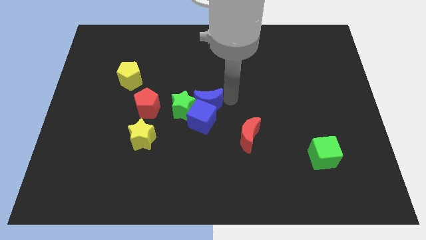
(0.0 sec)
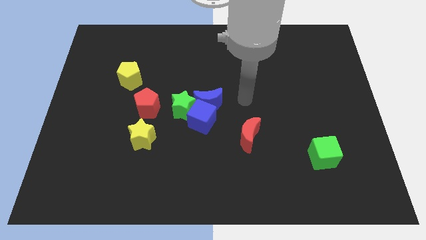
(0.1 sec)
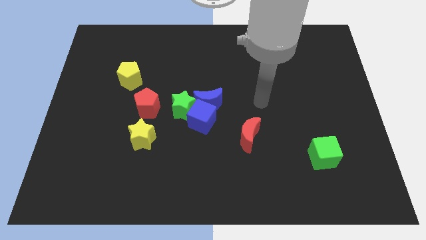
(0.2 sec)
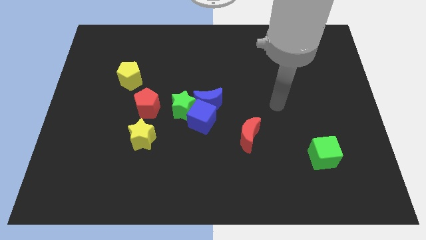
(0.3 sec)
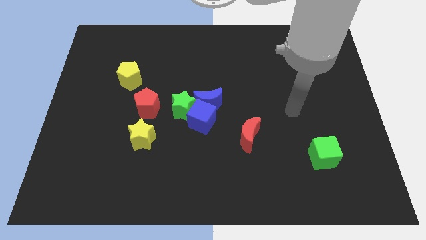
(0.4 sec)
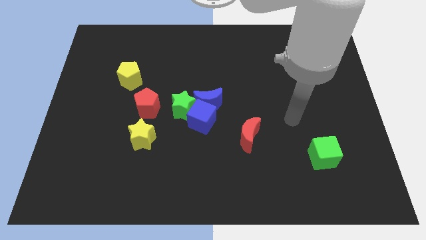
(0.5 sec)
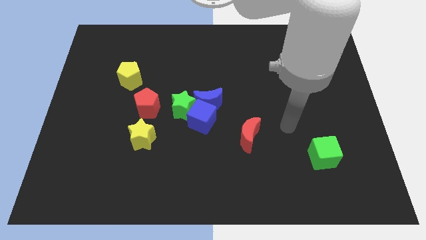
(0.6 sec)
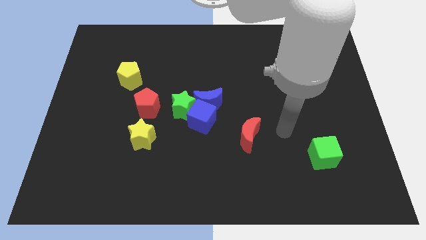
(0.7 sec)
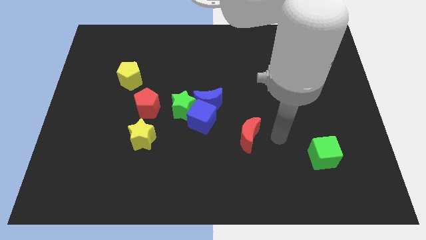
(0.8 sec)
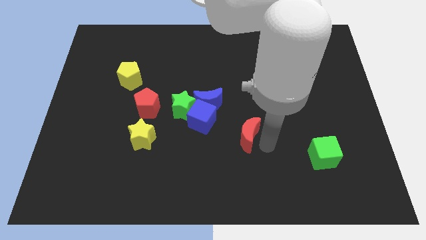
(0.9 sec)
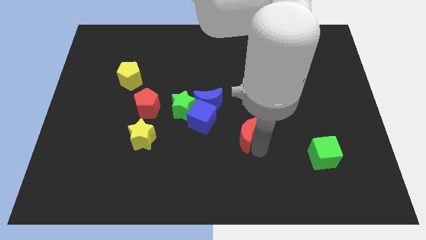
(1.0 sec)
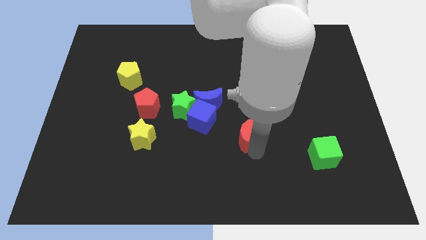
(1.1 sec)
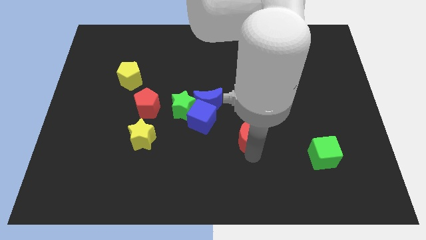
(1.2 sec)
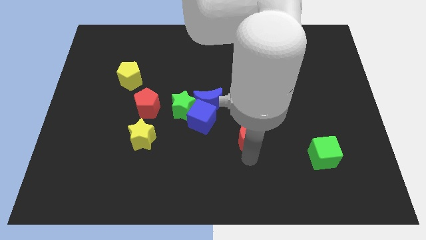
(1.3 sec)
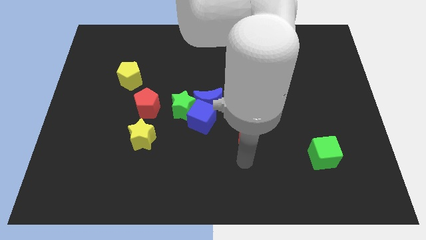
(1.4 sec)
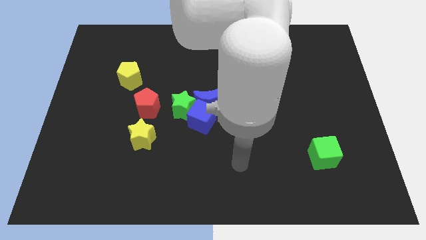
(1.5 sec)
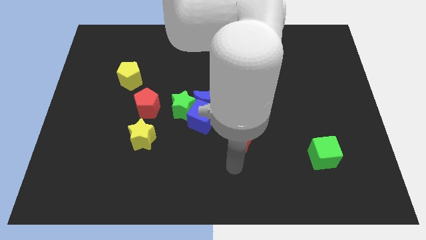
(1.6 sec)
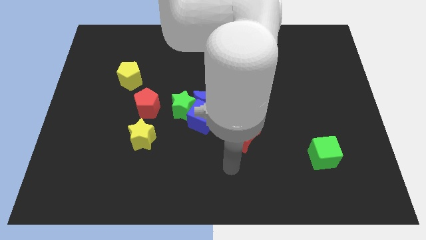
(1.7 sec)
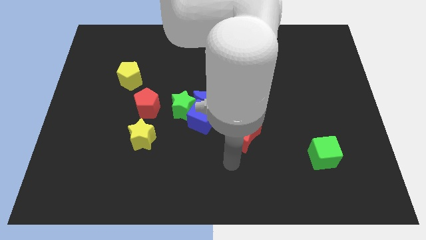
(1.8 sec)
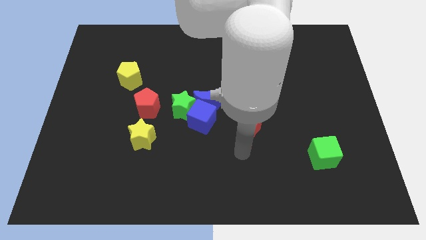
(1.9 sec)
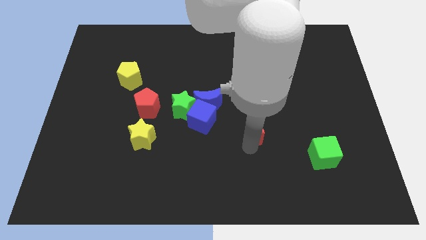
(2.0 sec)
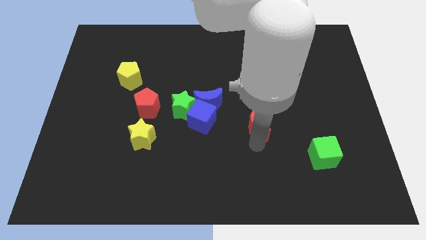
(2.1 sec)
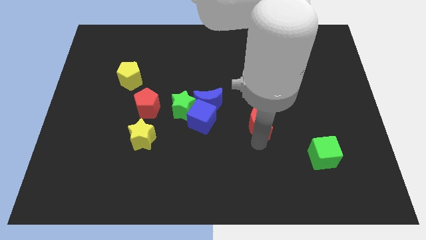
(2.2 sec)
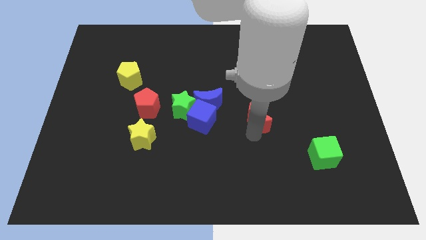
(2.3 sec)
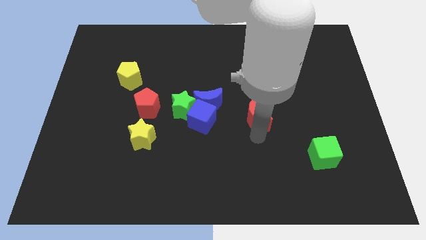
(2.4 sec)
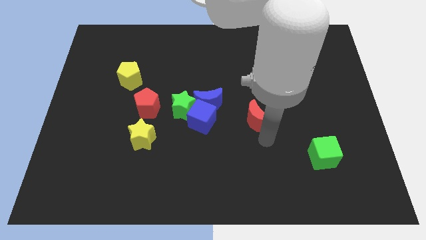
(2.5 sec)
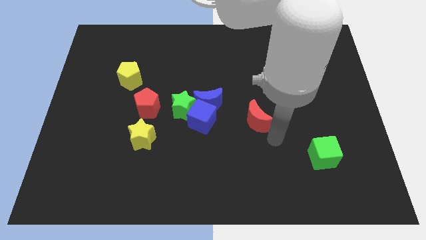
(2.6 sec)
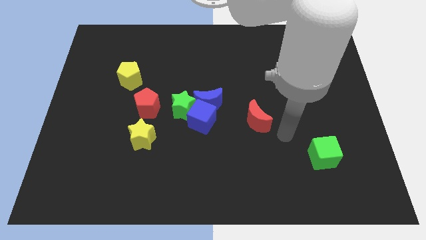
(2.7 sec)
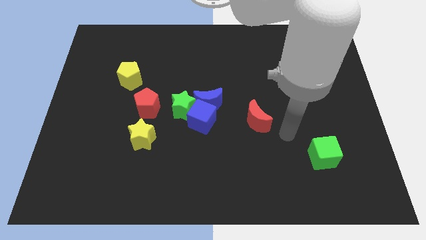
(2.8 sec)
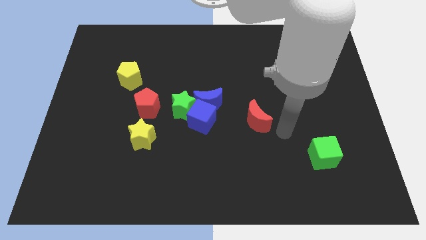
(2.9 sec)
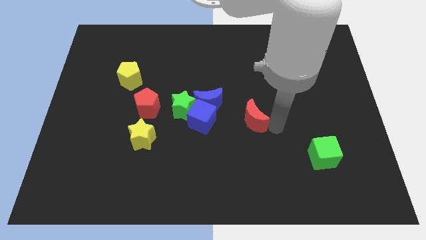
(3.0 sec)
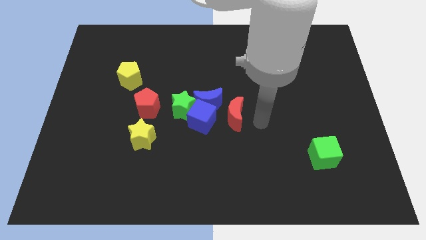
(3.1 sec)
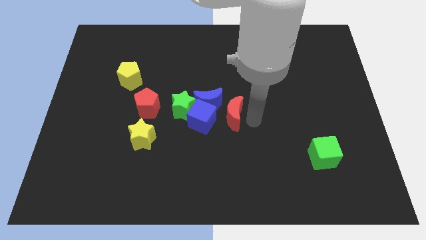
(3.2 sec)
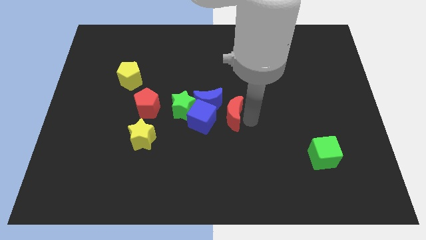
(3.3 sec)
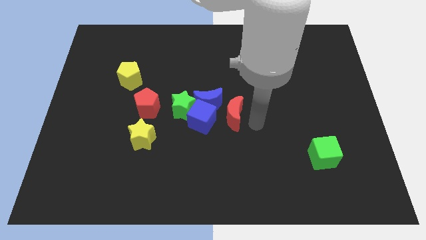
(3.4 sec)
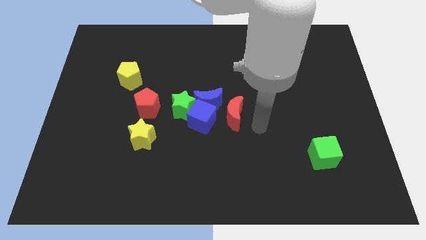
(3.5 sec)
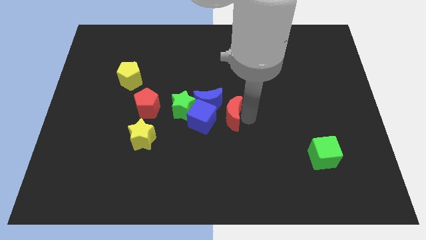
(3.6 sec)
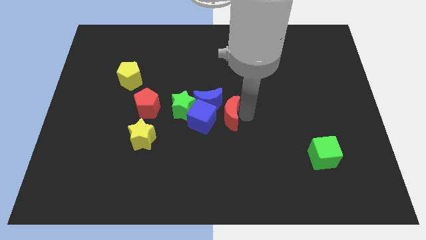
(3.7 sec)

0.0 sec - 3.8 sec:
push the red moon on the right side of the blue blocks

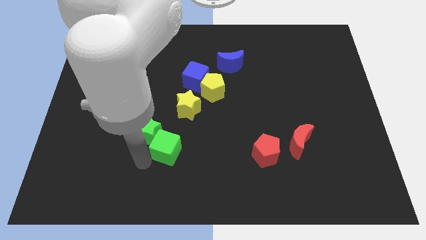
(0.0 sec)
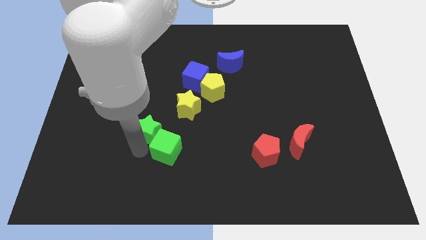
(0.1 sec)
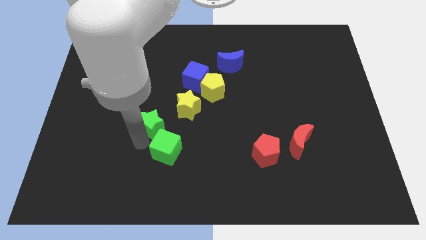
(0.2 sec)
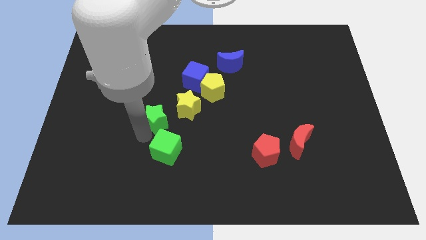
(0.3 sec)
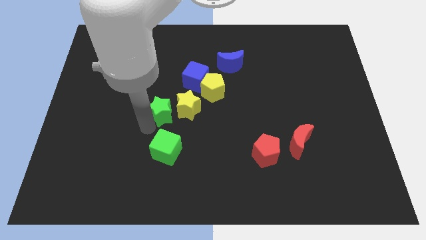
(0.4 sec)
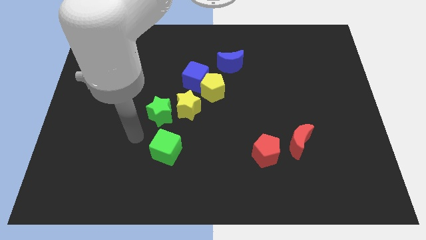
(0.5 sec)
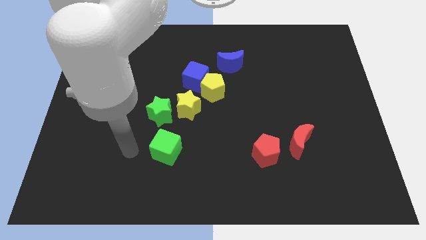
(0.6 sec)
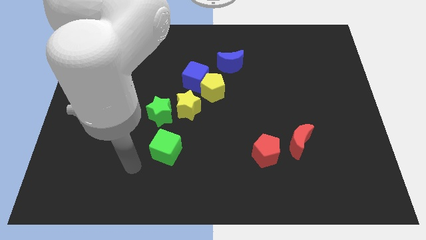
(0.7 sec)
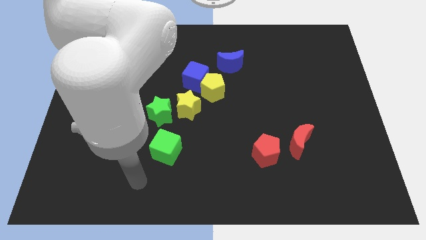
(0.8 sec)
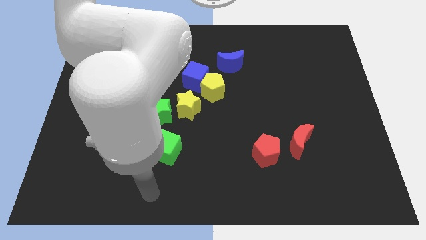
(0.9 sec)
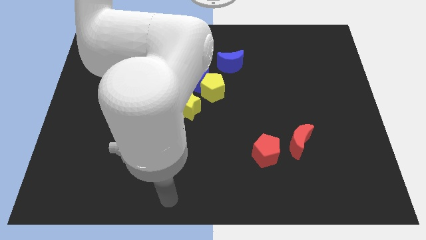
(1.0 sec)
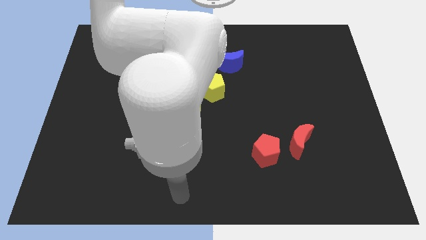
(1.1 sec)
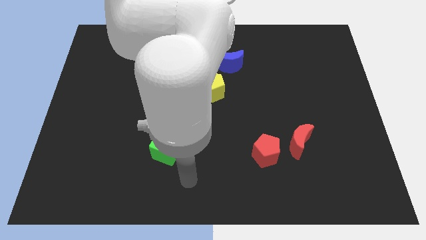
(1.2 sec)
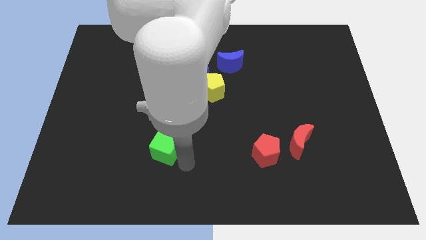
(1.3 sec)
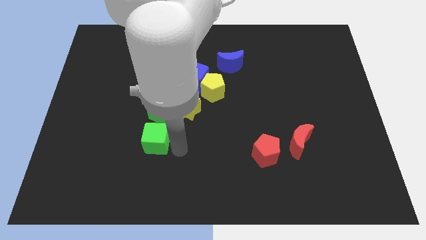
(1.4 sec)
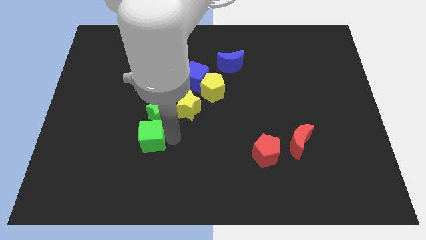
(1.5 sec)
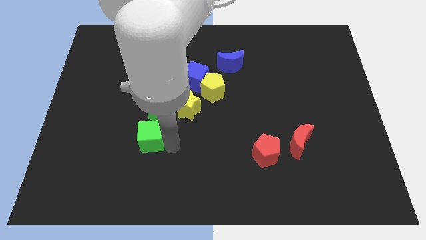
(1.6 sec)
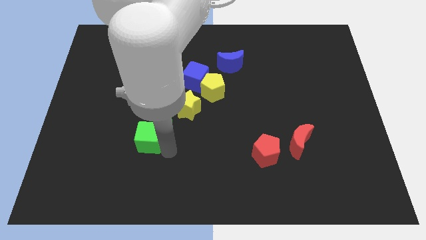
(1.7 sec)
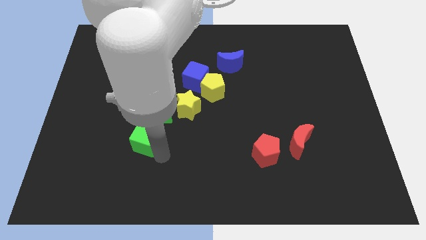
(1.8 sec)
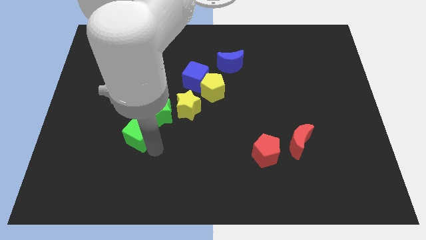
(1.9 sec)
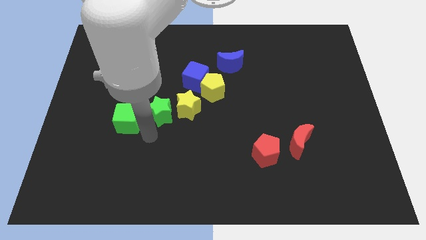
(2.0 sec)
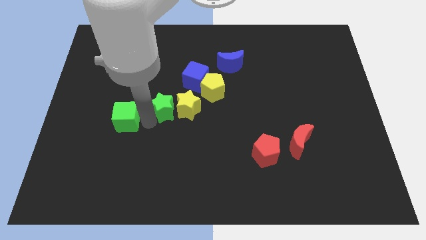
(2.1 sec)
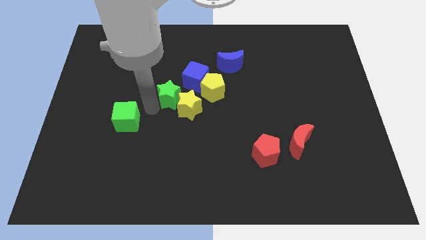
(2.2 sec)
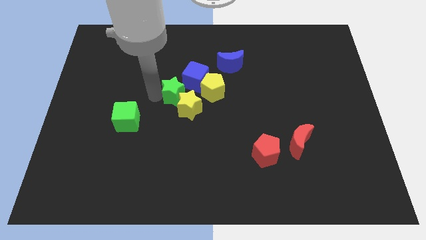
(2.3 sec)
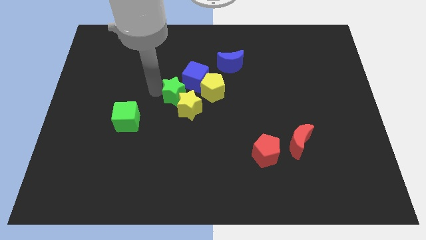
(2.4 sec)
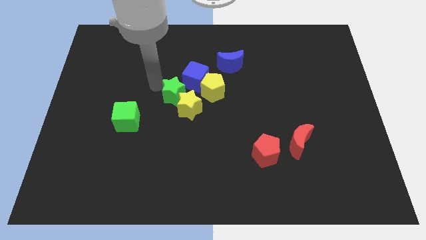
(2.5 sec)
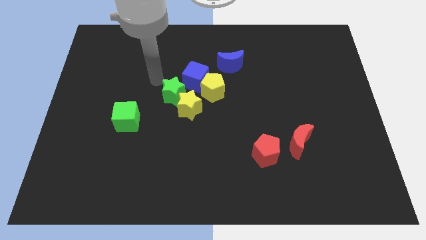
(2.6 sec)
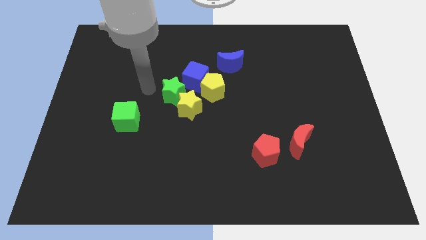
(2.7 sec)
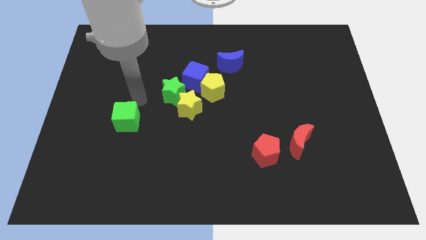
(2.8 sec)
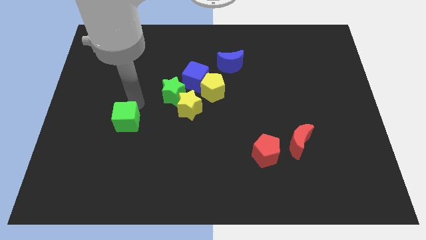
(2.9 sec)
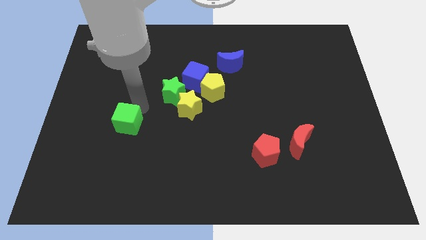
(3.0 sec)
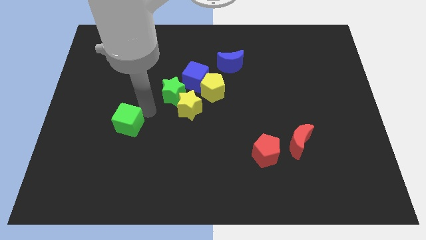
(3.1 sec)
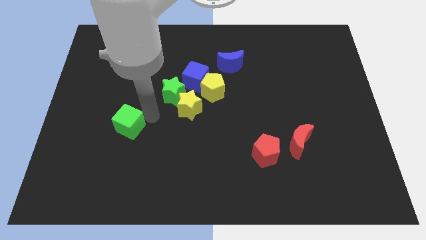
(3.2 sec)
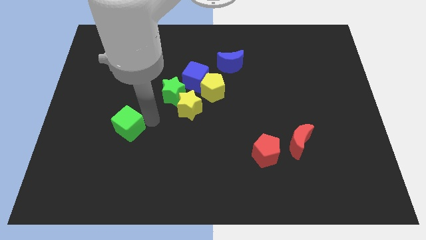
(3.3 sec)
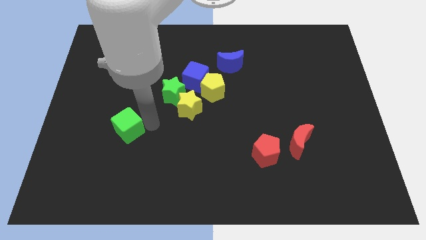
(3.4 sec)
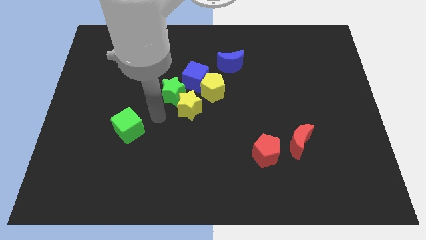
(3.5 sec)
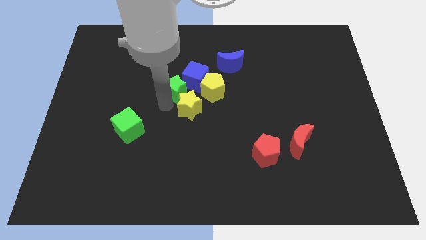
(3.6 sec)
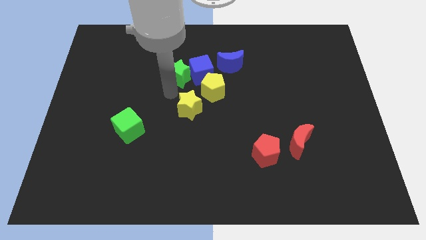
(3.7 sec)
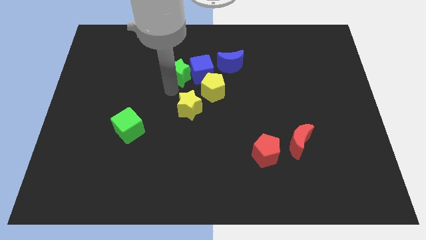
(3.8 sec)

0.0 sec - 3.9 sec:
push the green star into the left of the blue cube

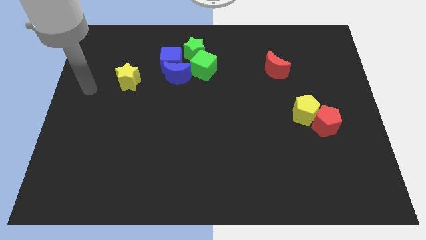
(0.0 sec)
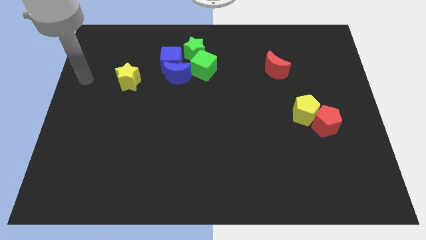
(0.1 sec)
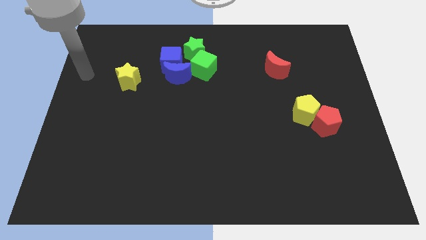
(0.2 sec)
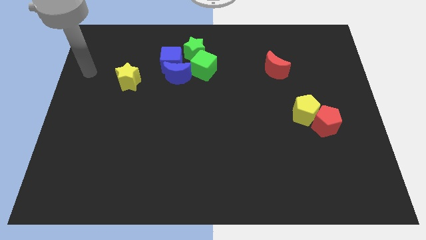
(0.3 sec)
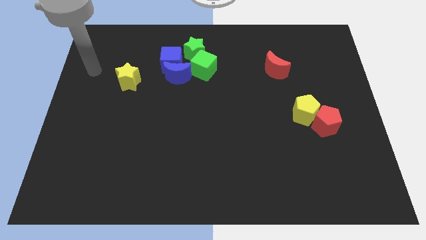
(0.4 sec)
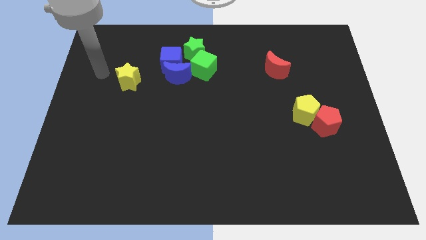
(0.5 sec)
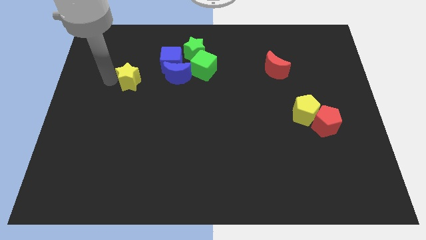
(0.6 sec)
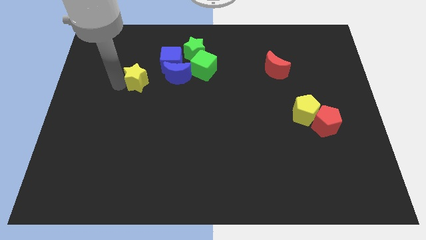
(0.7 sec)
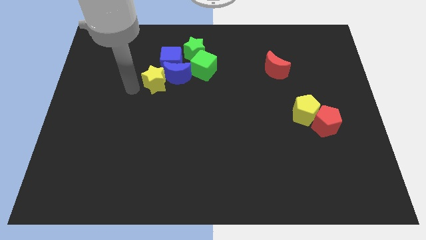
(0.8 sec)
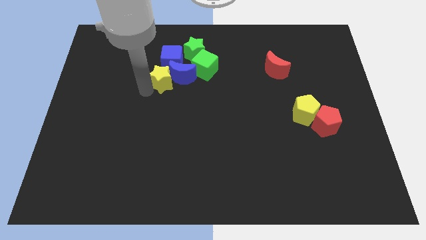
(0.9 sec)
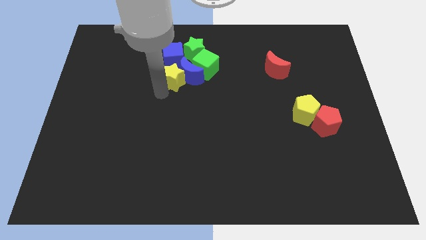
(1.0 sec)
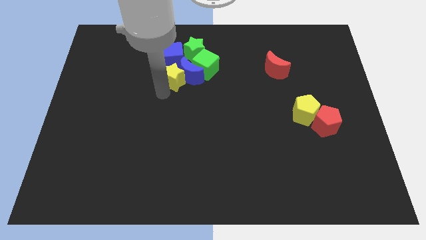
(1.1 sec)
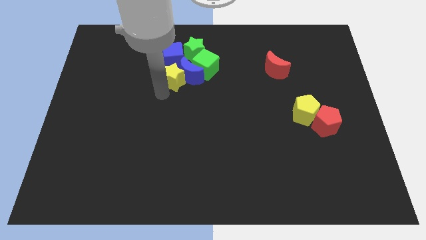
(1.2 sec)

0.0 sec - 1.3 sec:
push the yellow star into the left side of the blue moon
